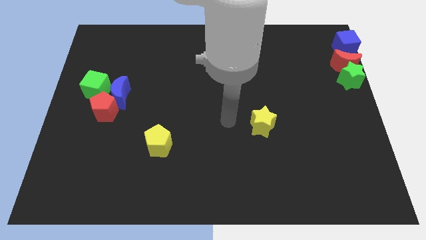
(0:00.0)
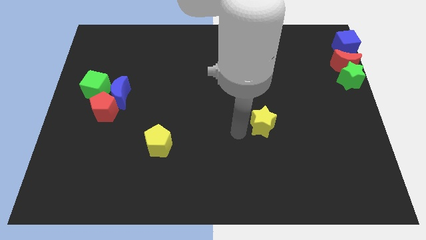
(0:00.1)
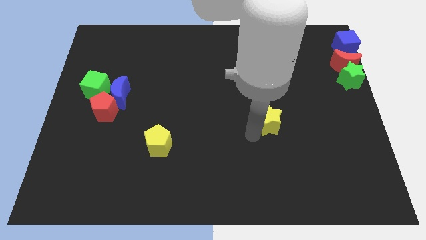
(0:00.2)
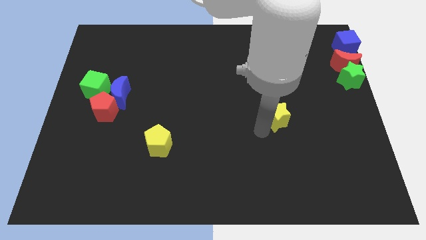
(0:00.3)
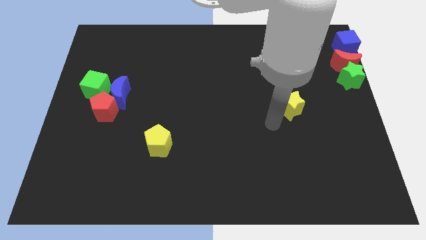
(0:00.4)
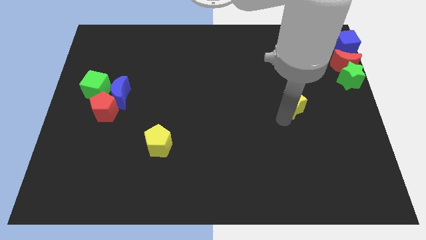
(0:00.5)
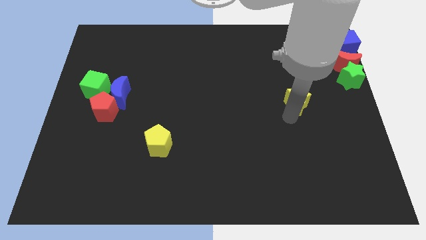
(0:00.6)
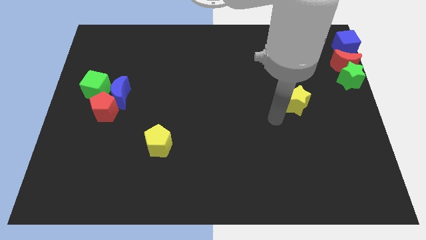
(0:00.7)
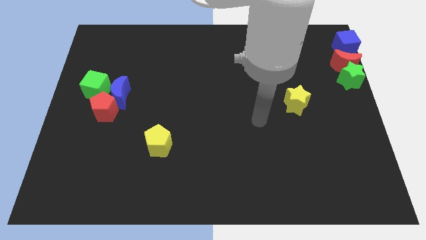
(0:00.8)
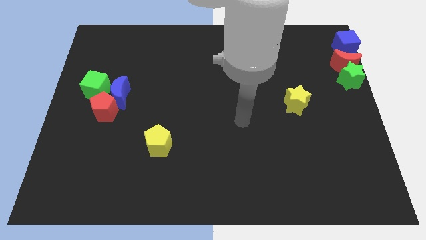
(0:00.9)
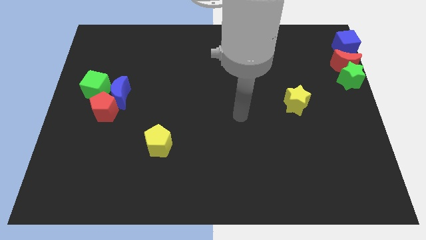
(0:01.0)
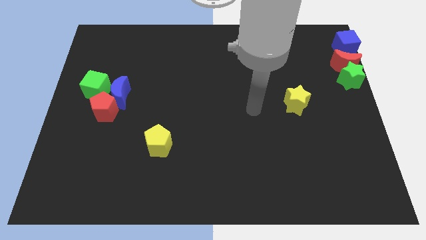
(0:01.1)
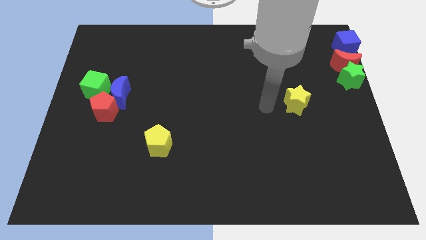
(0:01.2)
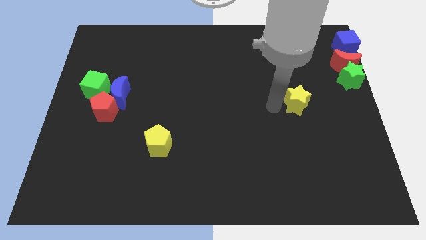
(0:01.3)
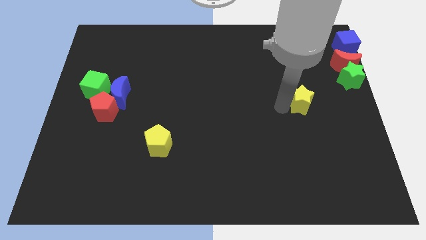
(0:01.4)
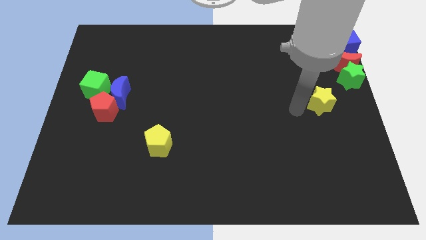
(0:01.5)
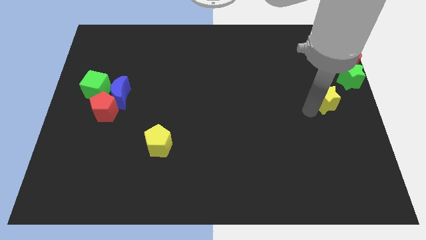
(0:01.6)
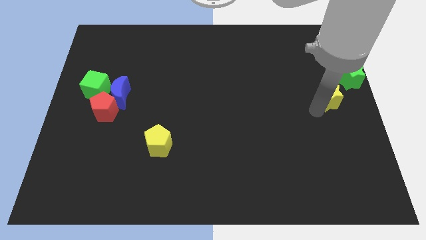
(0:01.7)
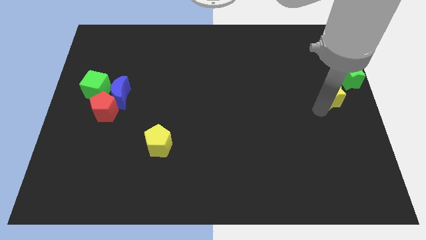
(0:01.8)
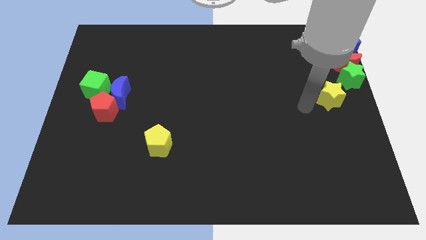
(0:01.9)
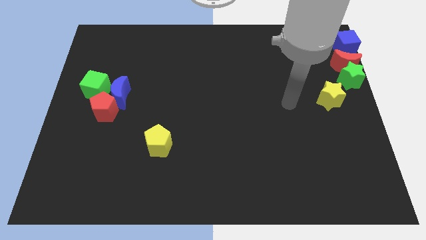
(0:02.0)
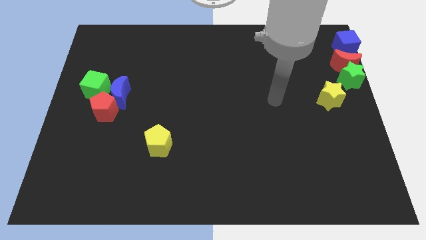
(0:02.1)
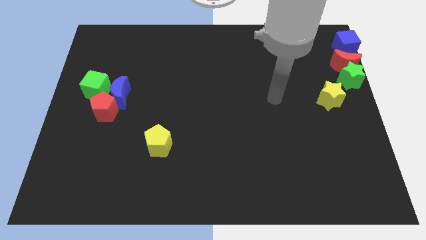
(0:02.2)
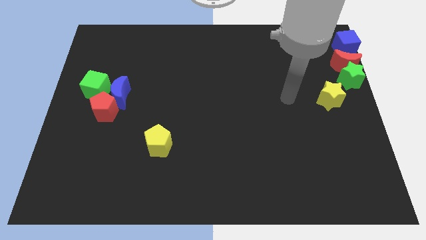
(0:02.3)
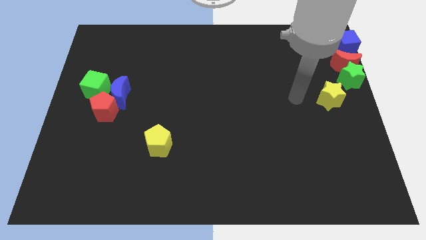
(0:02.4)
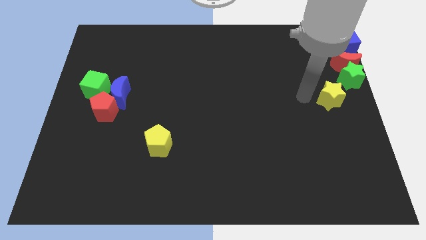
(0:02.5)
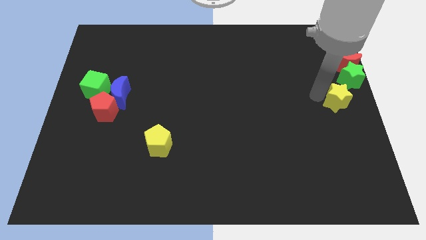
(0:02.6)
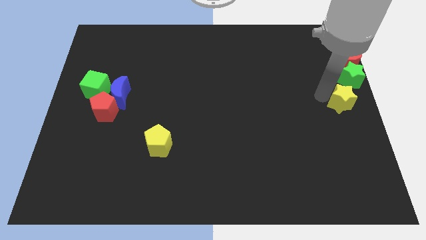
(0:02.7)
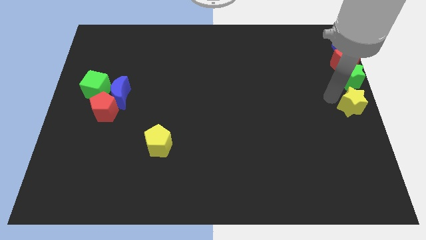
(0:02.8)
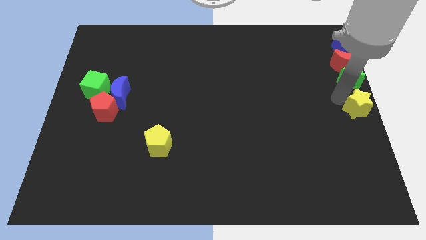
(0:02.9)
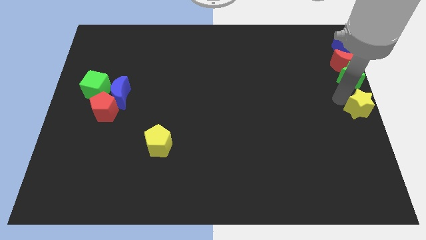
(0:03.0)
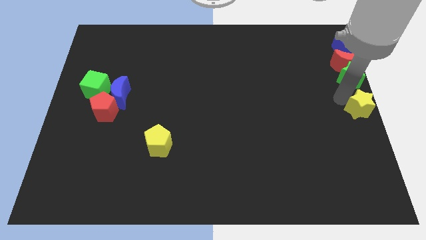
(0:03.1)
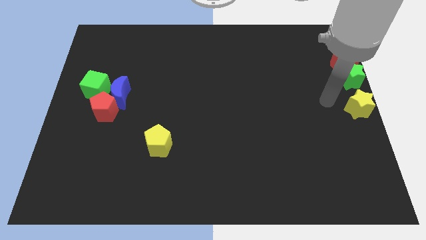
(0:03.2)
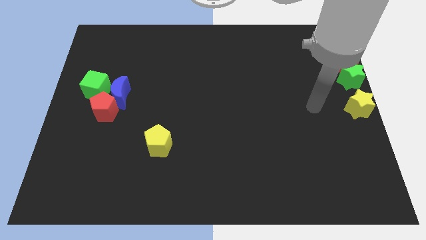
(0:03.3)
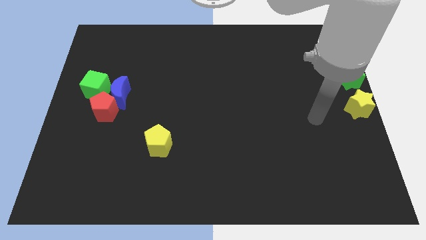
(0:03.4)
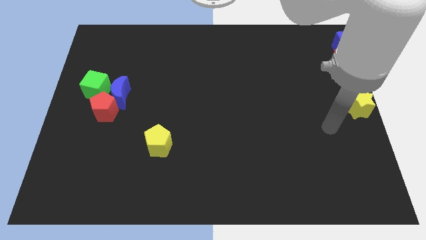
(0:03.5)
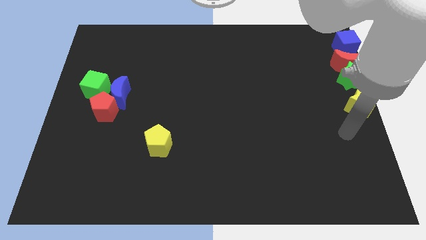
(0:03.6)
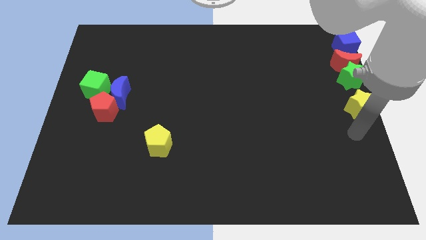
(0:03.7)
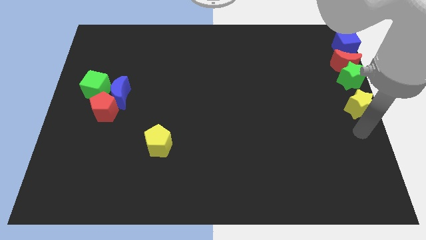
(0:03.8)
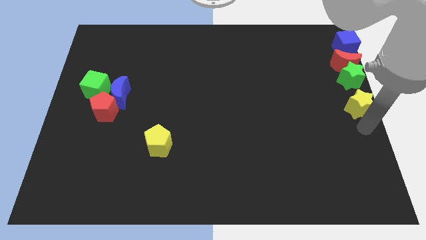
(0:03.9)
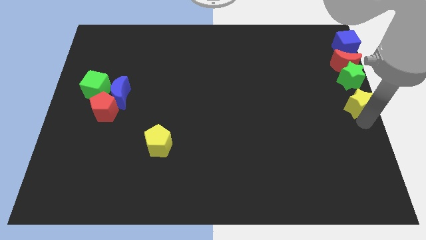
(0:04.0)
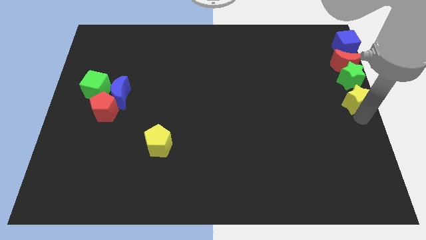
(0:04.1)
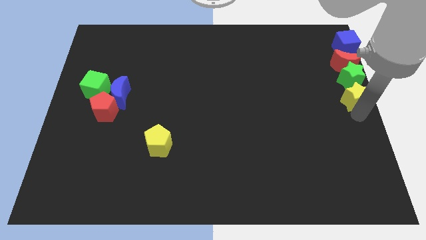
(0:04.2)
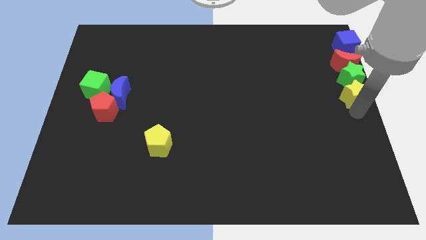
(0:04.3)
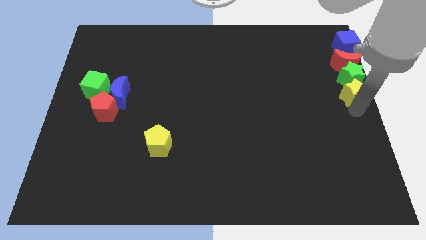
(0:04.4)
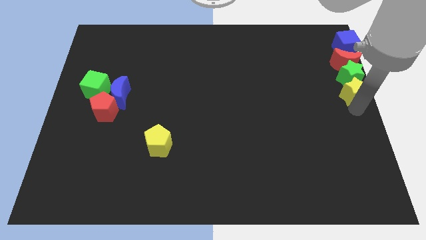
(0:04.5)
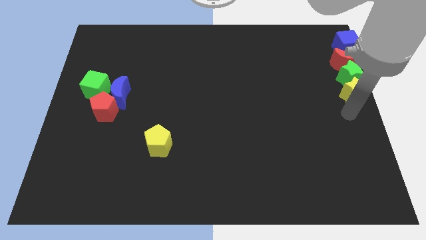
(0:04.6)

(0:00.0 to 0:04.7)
push the yellow star towards the green star

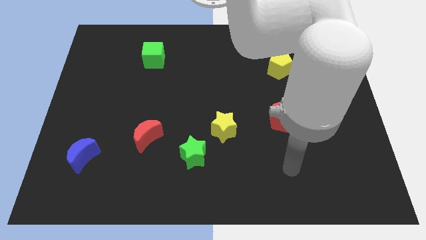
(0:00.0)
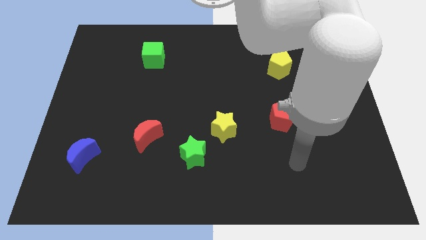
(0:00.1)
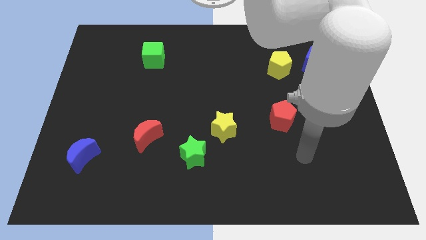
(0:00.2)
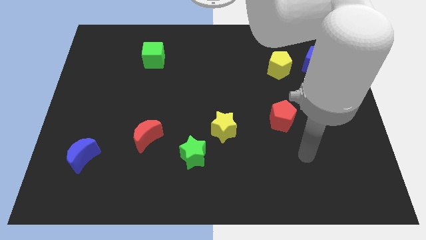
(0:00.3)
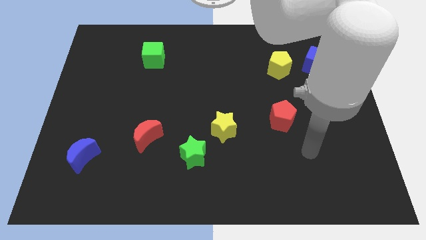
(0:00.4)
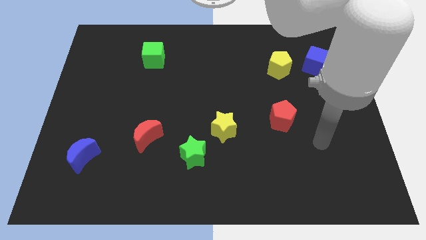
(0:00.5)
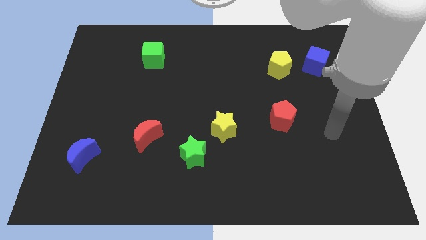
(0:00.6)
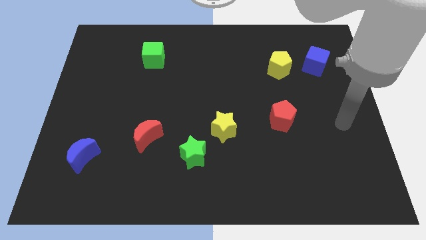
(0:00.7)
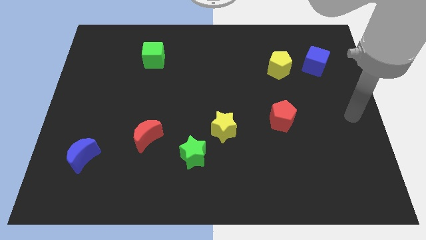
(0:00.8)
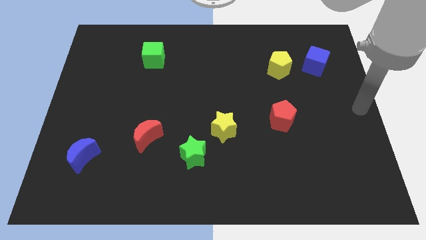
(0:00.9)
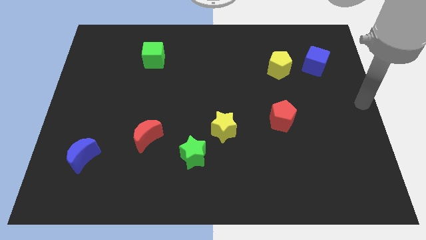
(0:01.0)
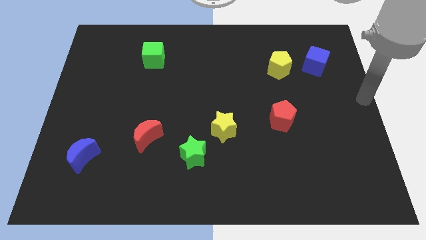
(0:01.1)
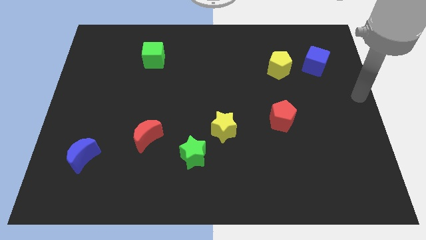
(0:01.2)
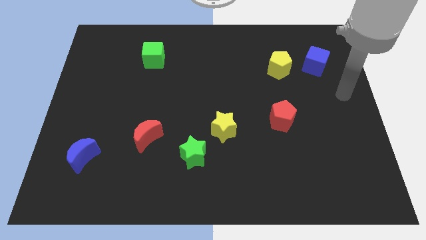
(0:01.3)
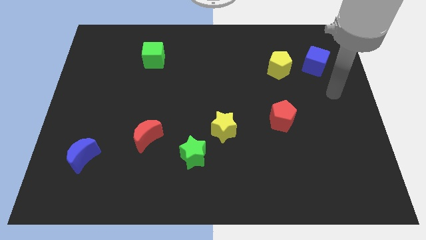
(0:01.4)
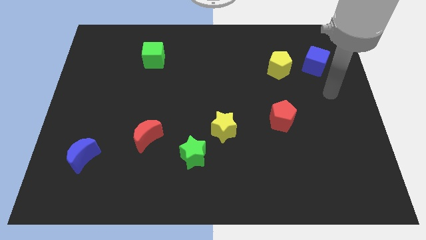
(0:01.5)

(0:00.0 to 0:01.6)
move your hand towards the blue cube

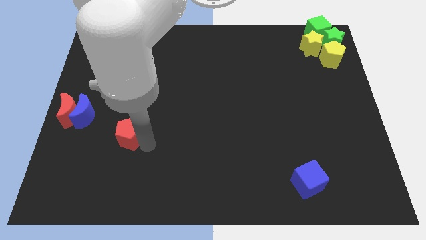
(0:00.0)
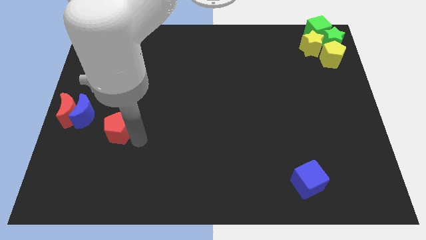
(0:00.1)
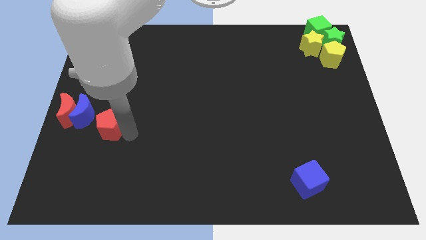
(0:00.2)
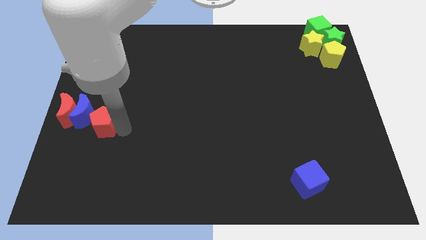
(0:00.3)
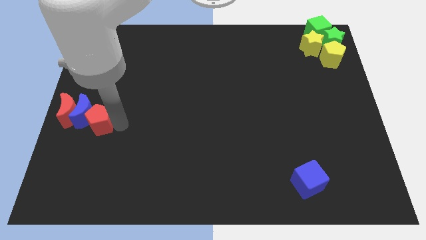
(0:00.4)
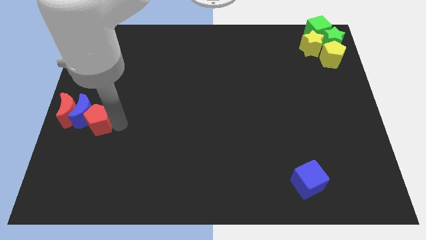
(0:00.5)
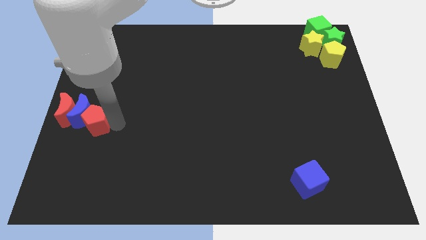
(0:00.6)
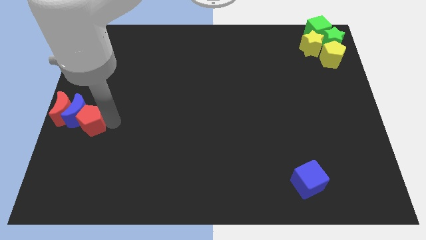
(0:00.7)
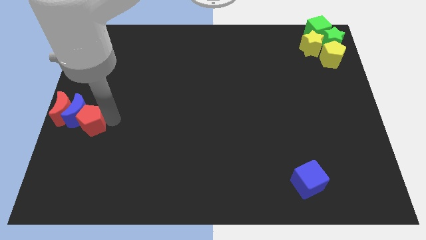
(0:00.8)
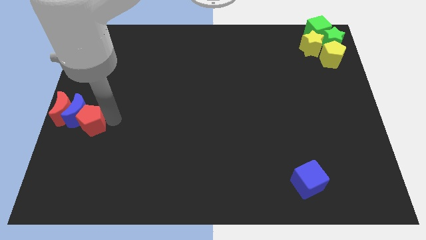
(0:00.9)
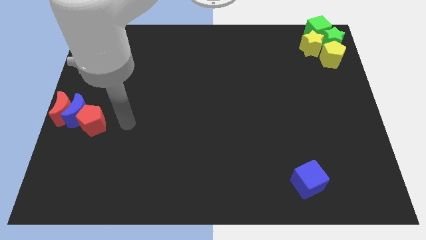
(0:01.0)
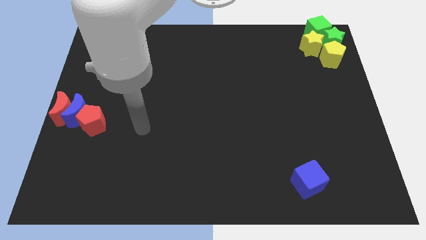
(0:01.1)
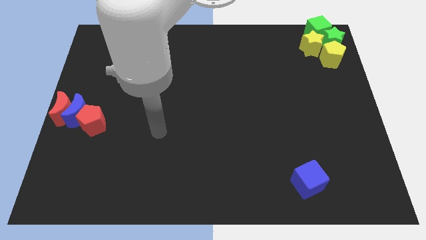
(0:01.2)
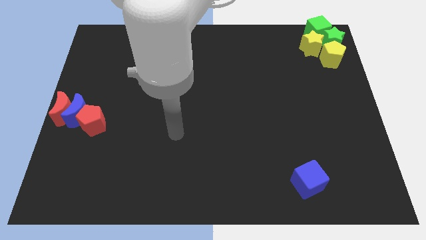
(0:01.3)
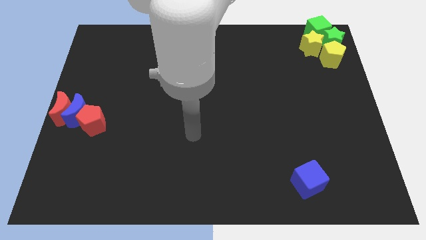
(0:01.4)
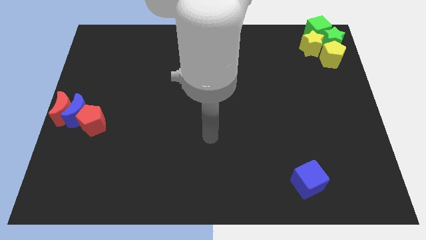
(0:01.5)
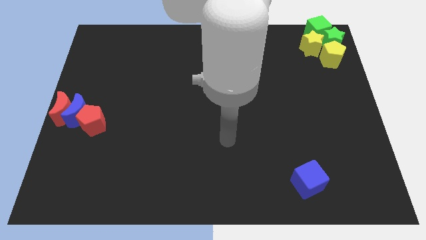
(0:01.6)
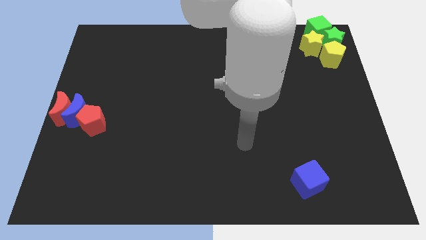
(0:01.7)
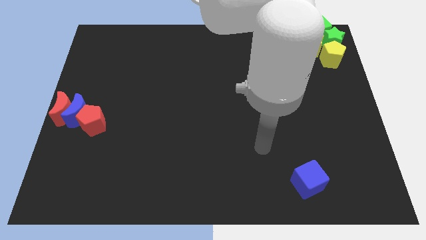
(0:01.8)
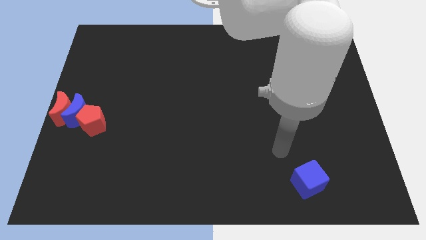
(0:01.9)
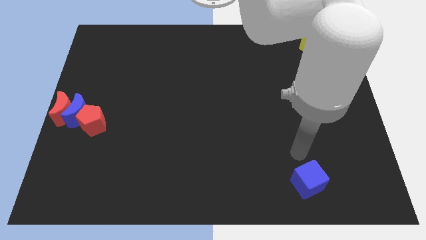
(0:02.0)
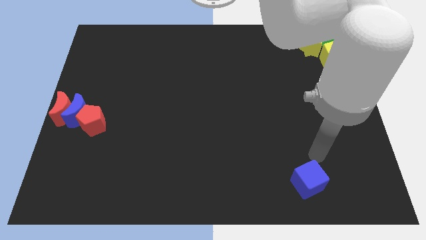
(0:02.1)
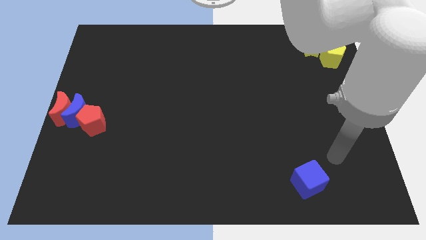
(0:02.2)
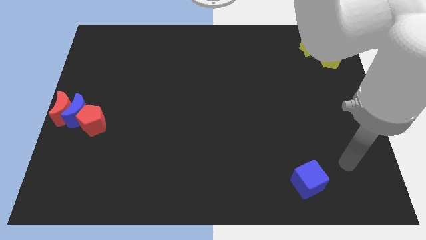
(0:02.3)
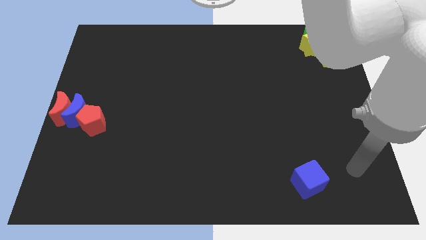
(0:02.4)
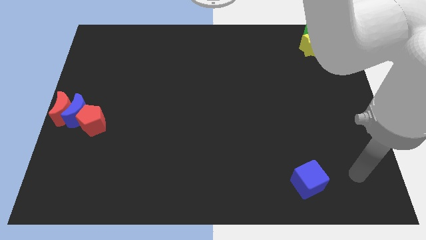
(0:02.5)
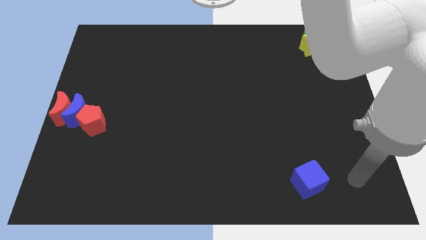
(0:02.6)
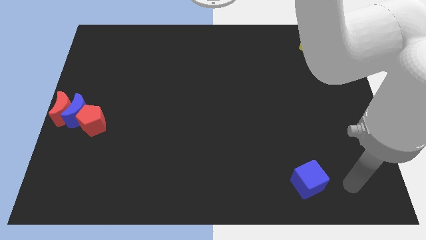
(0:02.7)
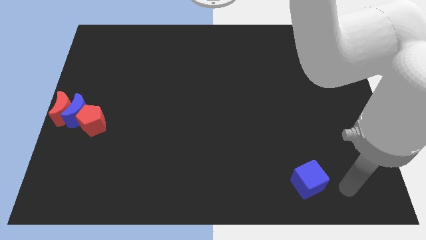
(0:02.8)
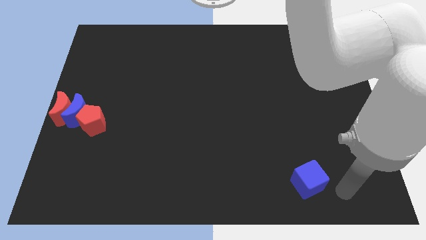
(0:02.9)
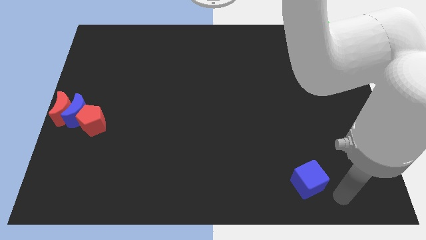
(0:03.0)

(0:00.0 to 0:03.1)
drag red pentagon to the blue crescent
